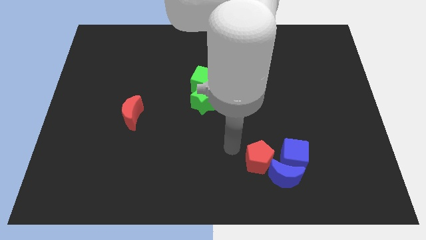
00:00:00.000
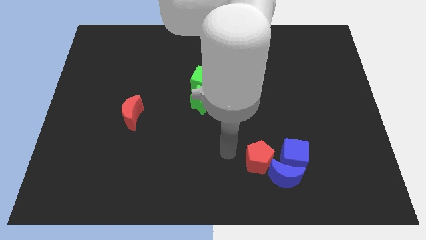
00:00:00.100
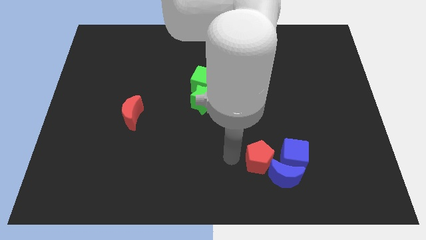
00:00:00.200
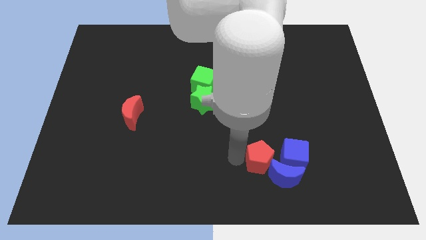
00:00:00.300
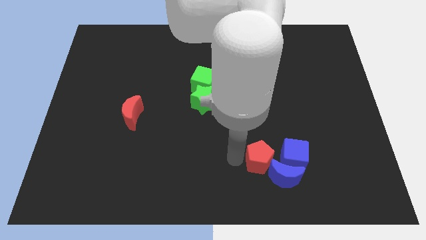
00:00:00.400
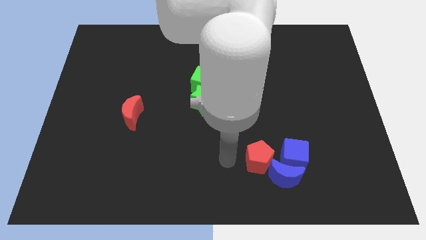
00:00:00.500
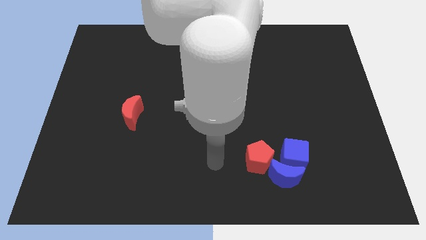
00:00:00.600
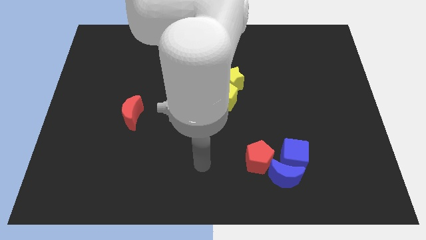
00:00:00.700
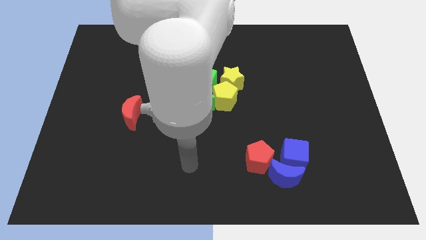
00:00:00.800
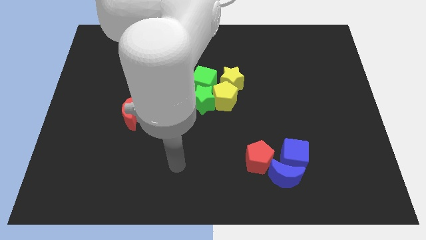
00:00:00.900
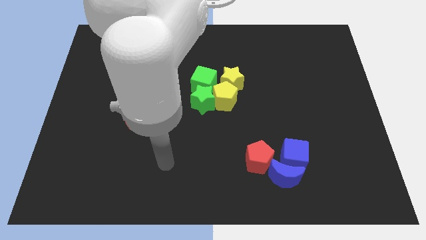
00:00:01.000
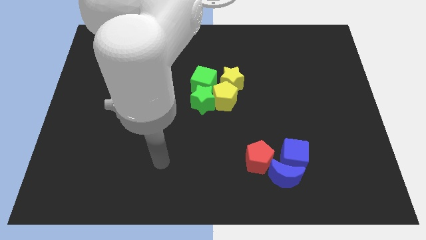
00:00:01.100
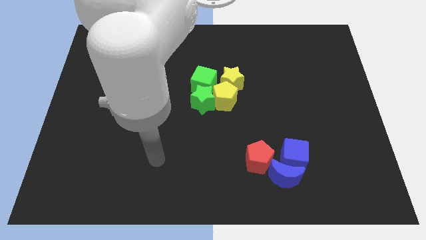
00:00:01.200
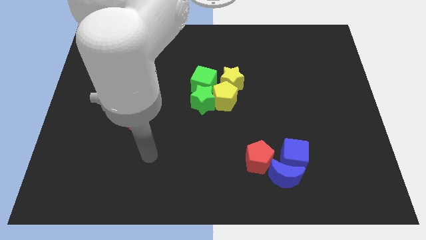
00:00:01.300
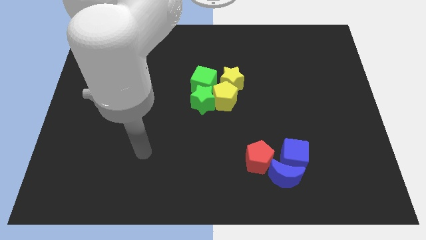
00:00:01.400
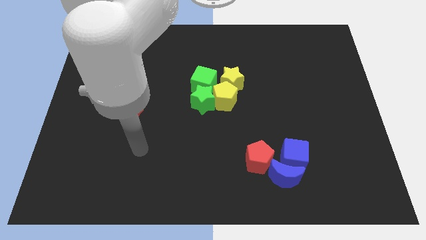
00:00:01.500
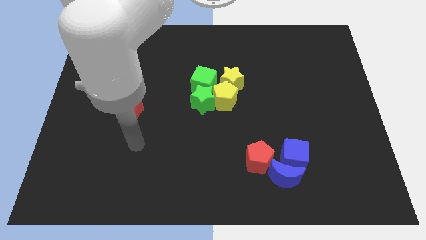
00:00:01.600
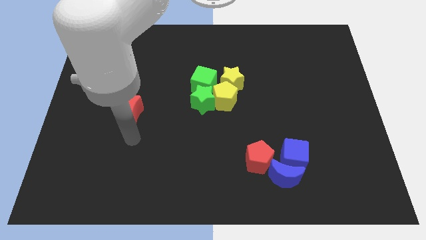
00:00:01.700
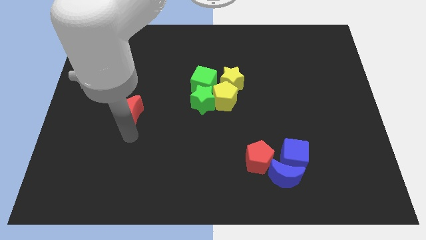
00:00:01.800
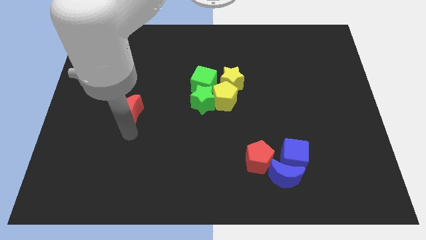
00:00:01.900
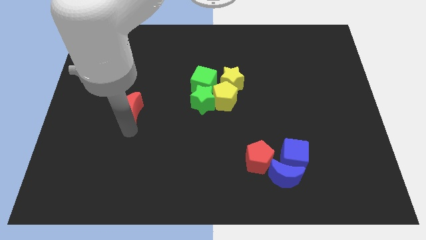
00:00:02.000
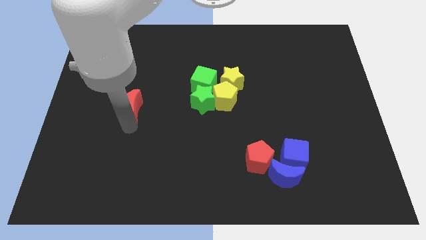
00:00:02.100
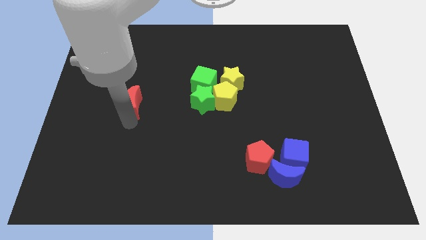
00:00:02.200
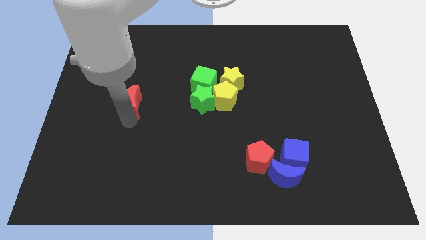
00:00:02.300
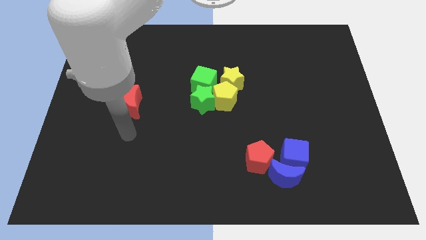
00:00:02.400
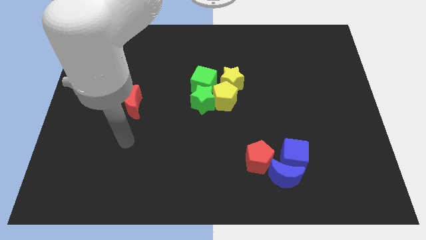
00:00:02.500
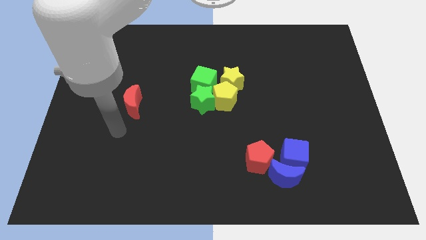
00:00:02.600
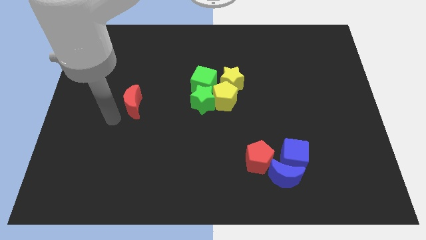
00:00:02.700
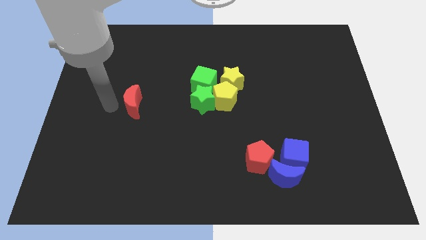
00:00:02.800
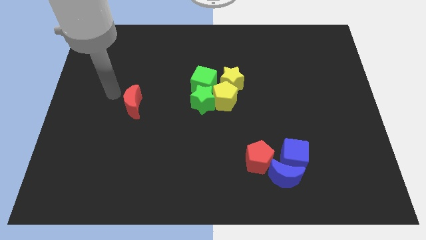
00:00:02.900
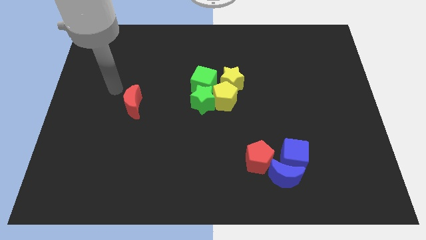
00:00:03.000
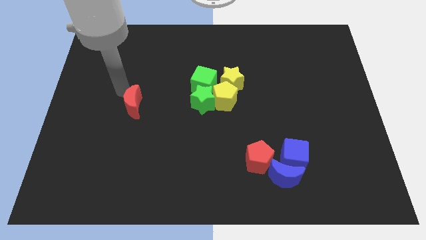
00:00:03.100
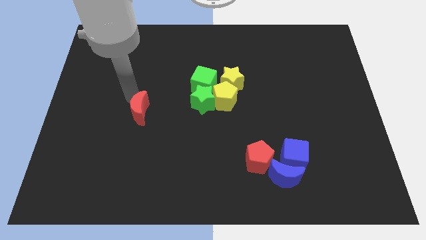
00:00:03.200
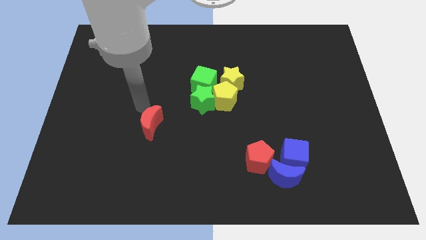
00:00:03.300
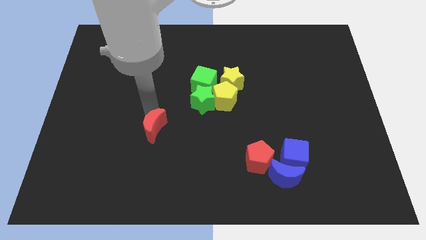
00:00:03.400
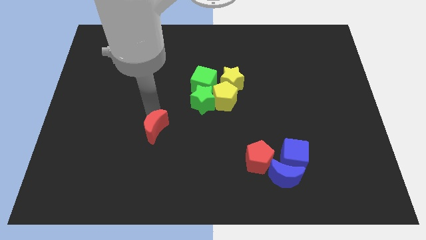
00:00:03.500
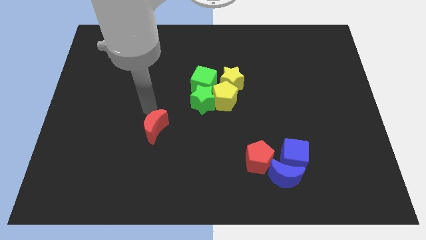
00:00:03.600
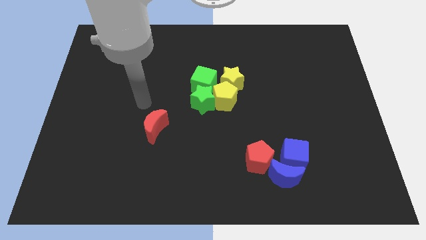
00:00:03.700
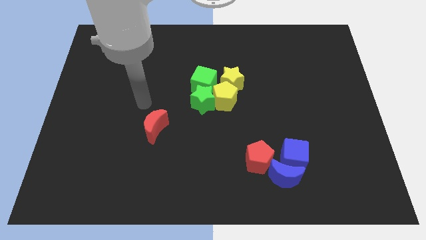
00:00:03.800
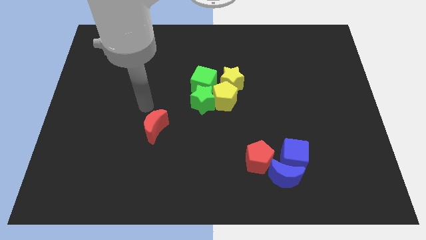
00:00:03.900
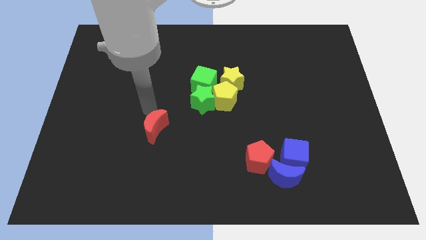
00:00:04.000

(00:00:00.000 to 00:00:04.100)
move the red moon diagonally to the bottom left of the green star

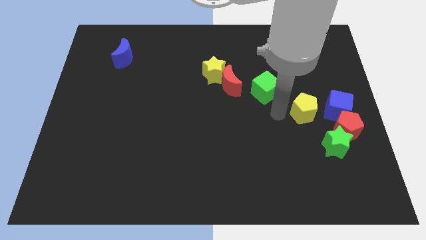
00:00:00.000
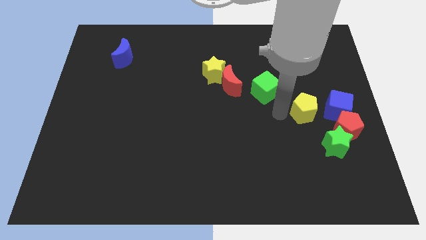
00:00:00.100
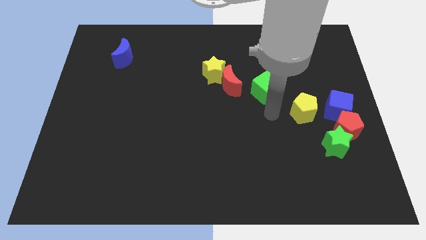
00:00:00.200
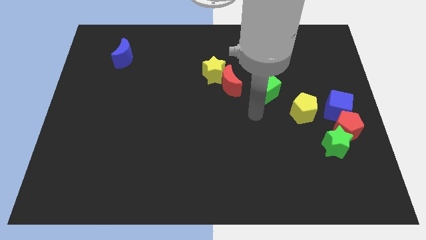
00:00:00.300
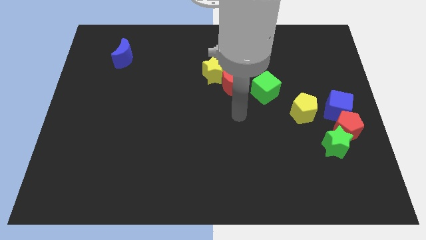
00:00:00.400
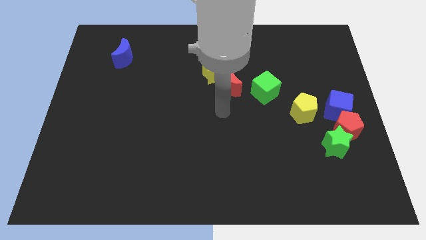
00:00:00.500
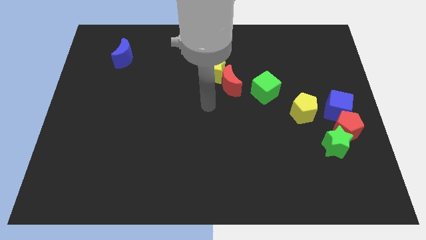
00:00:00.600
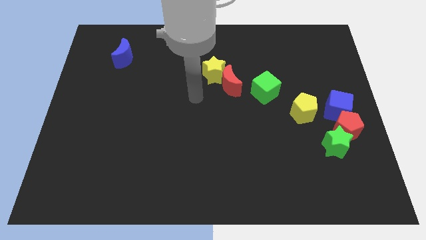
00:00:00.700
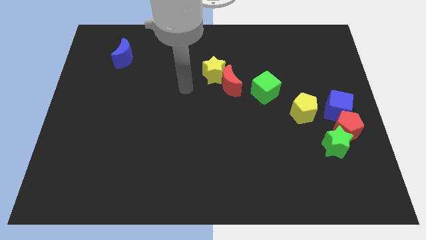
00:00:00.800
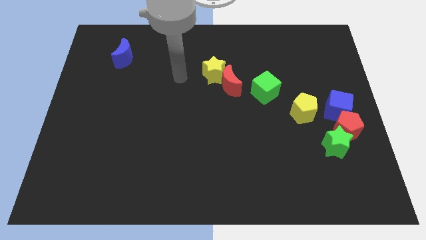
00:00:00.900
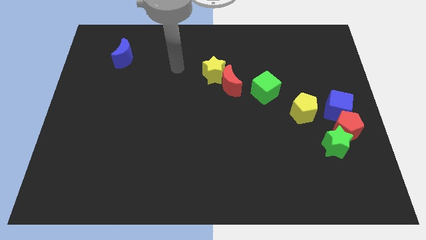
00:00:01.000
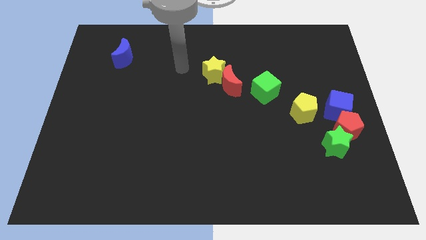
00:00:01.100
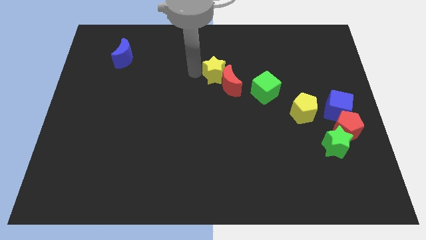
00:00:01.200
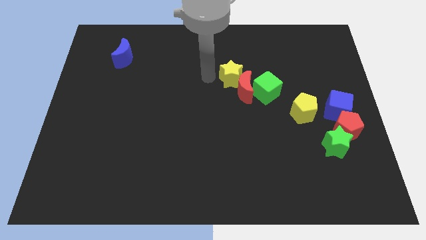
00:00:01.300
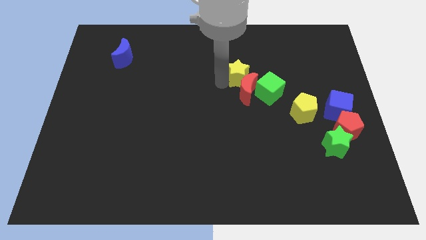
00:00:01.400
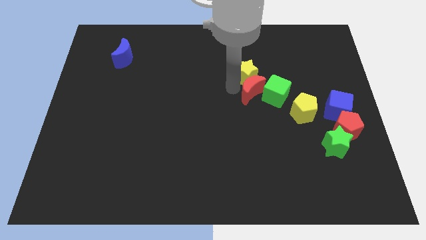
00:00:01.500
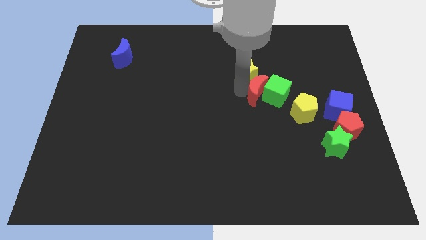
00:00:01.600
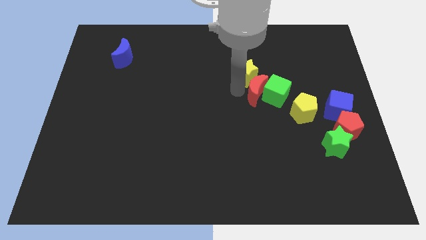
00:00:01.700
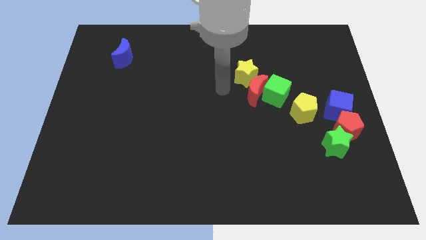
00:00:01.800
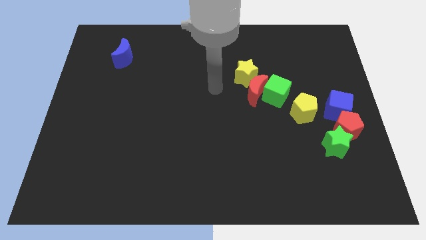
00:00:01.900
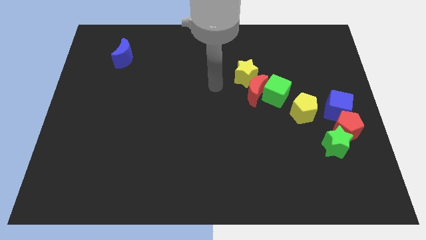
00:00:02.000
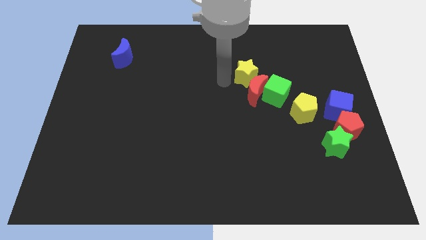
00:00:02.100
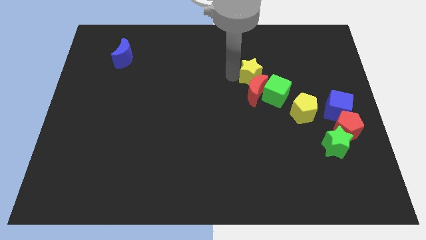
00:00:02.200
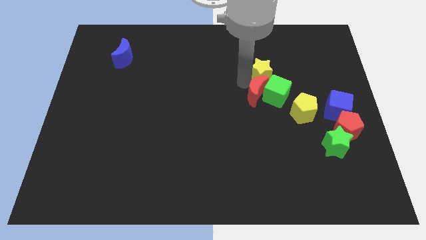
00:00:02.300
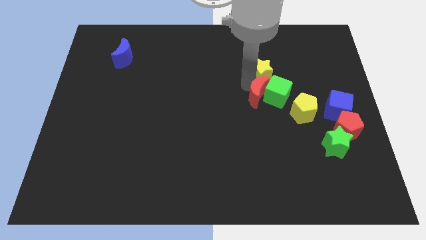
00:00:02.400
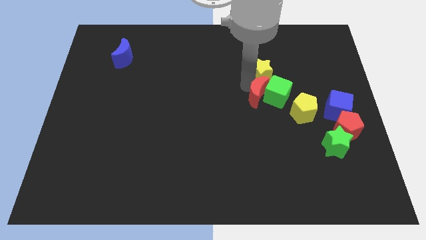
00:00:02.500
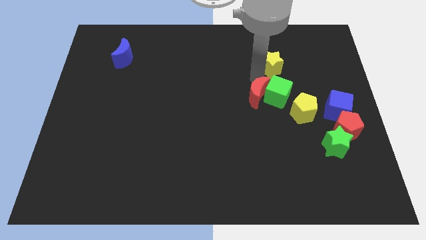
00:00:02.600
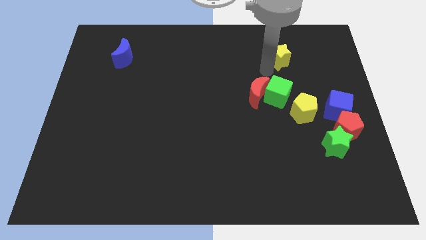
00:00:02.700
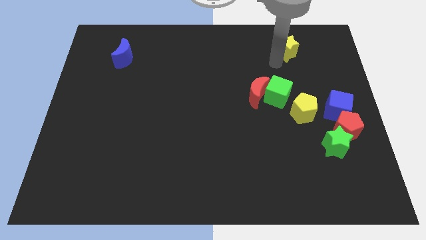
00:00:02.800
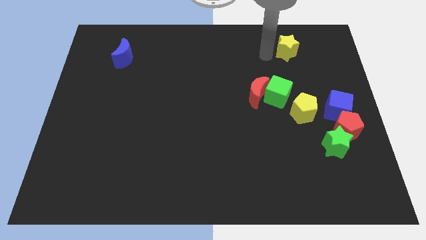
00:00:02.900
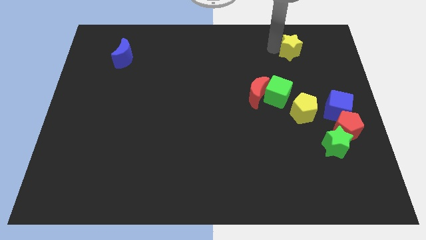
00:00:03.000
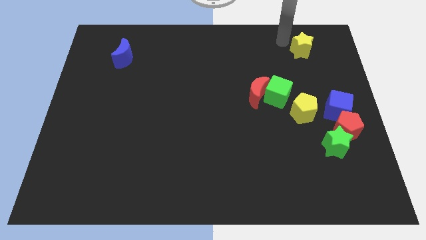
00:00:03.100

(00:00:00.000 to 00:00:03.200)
move the yellow star to the top right side

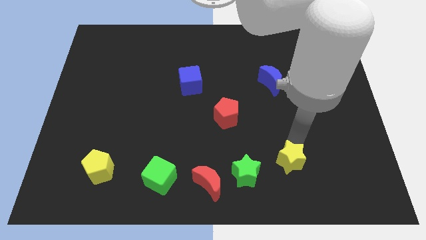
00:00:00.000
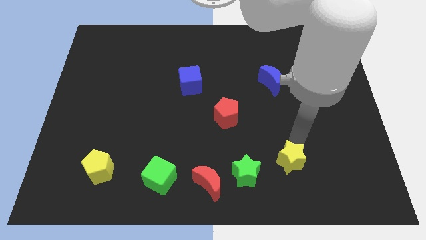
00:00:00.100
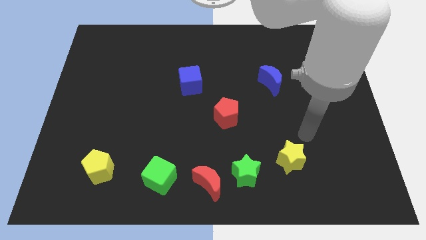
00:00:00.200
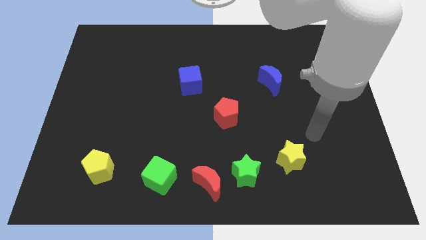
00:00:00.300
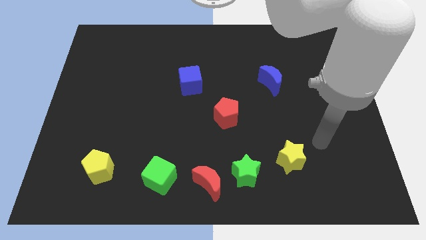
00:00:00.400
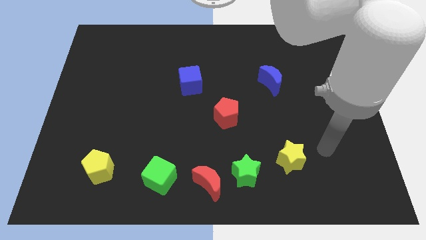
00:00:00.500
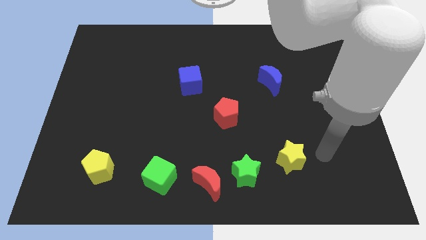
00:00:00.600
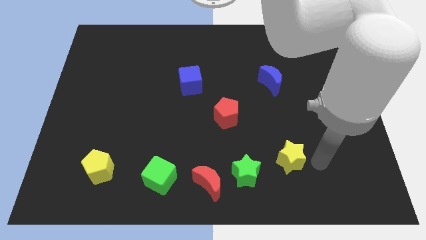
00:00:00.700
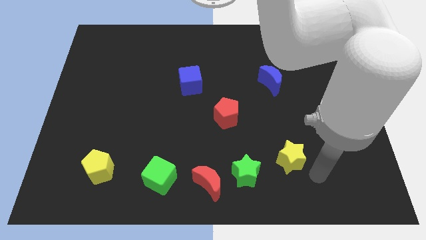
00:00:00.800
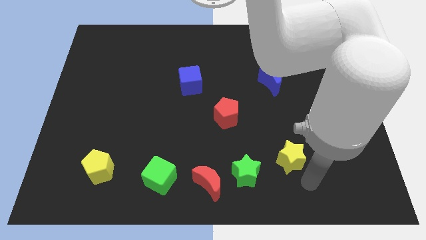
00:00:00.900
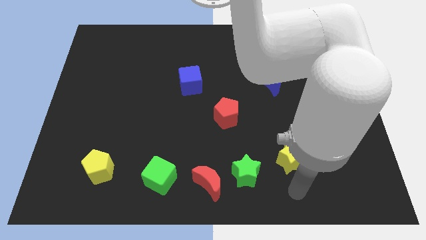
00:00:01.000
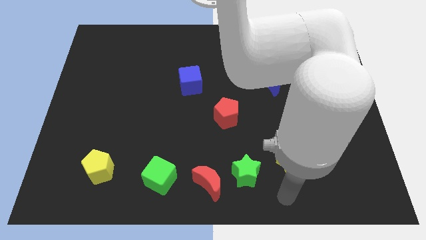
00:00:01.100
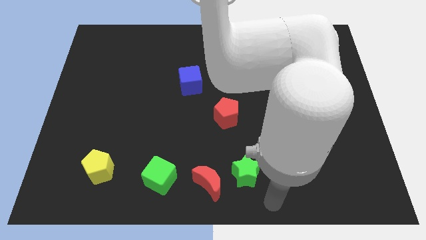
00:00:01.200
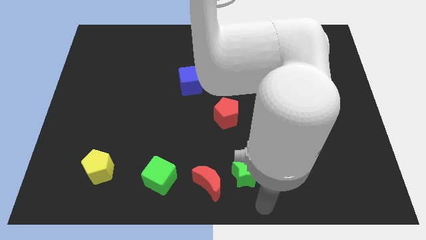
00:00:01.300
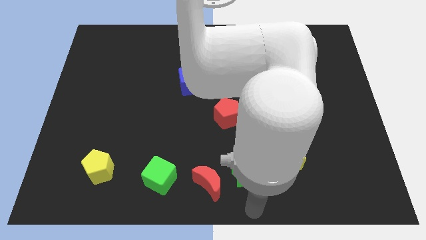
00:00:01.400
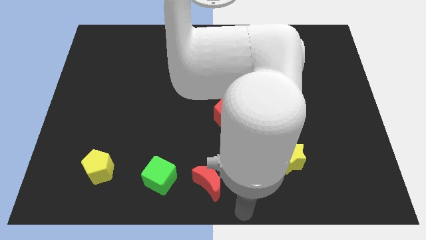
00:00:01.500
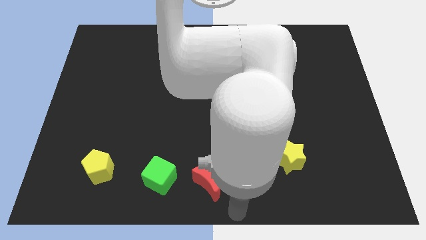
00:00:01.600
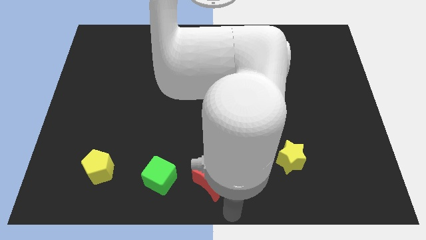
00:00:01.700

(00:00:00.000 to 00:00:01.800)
drag the arm to the bottom center

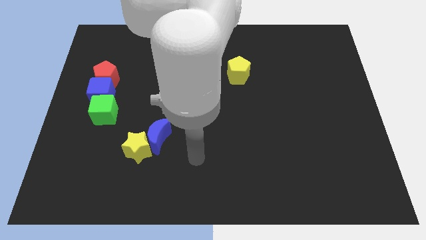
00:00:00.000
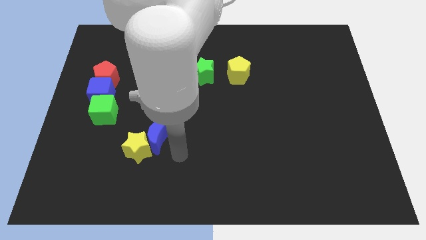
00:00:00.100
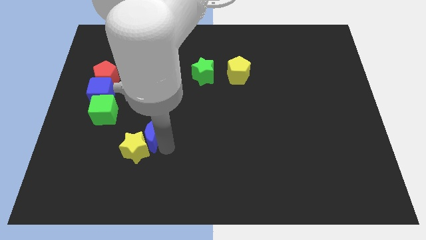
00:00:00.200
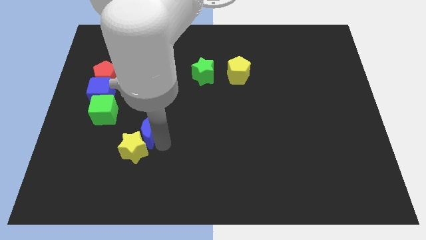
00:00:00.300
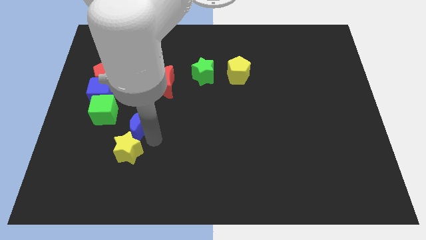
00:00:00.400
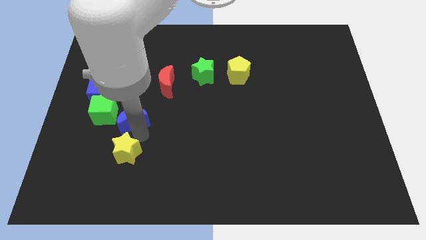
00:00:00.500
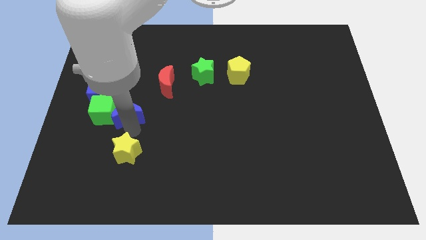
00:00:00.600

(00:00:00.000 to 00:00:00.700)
push blue crescent above yellow star
